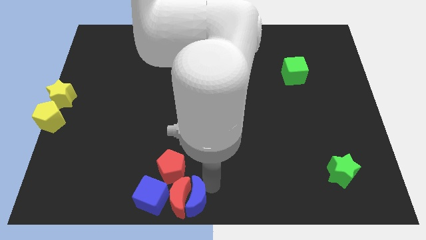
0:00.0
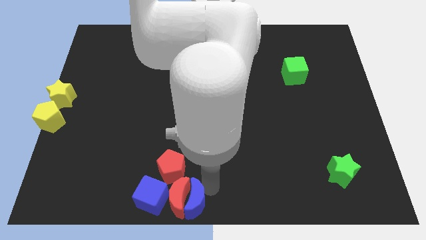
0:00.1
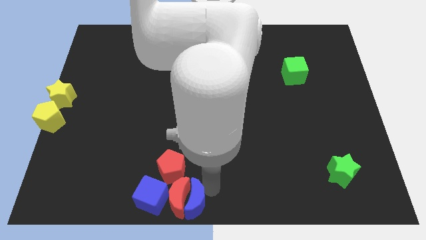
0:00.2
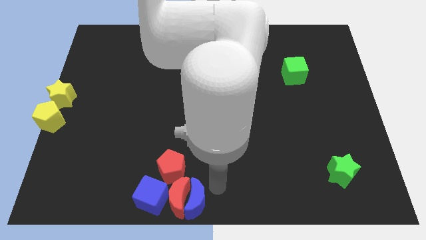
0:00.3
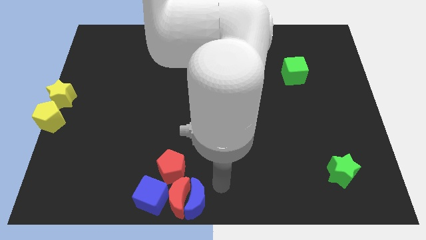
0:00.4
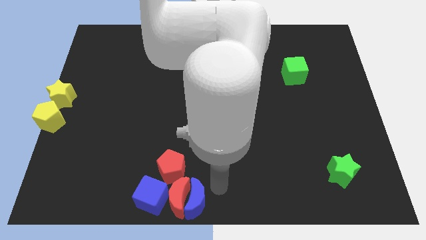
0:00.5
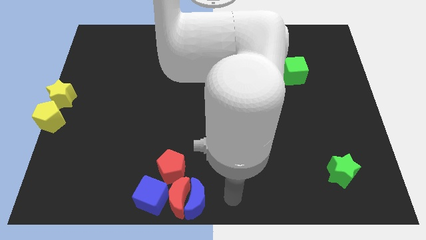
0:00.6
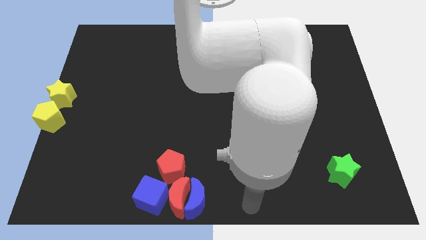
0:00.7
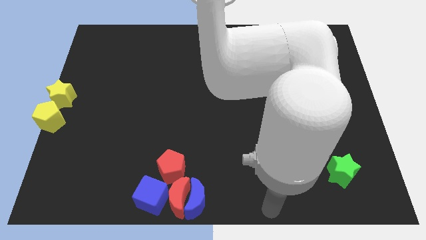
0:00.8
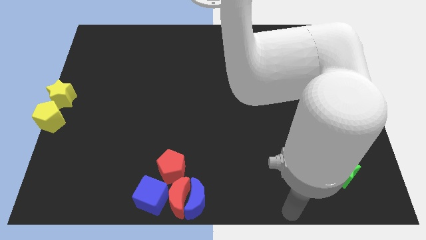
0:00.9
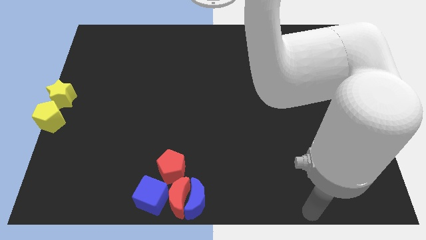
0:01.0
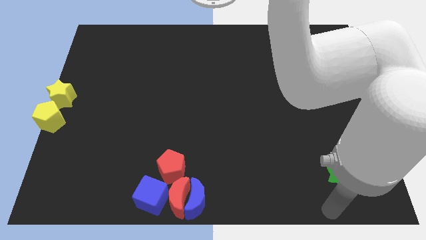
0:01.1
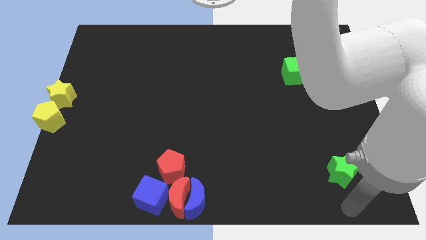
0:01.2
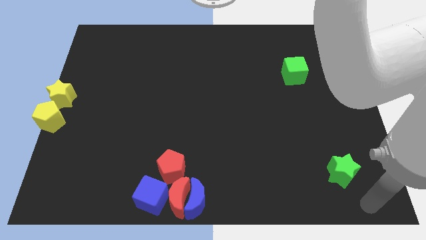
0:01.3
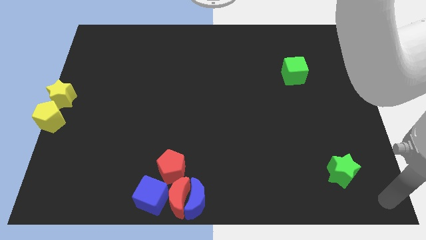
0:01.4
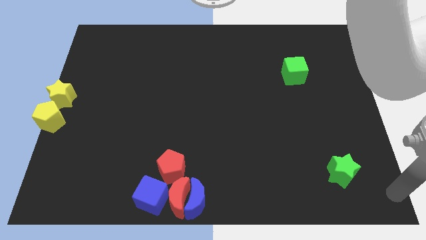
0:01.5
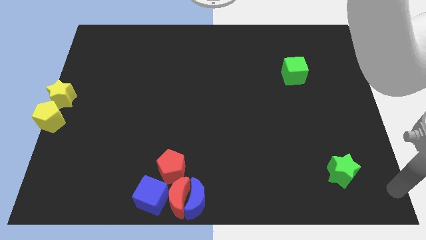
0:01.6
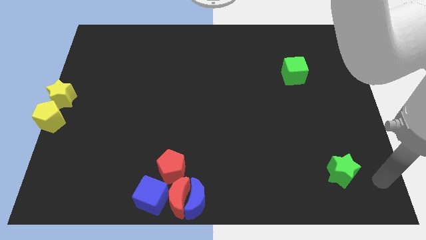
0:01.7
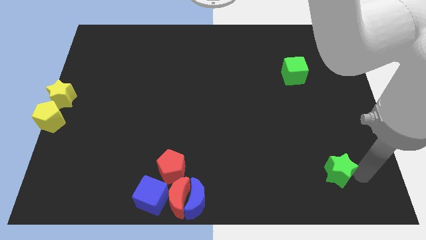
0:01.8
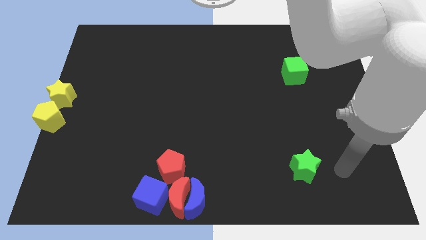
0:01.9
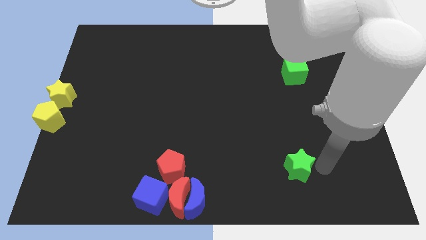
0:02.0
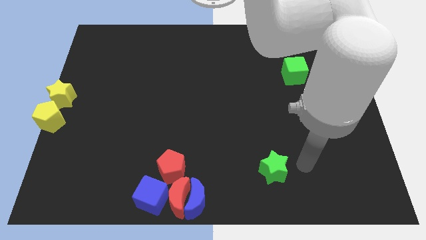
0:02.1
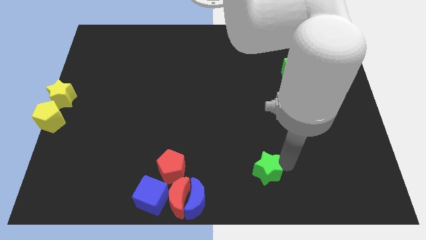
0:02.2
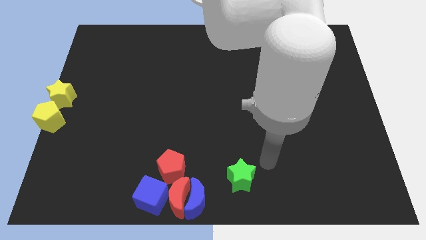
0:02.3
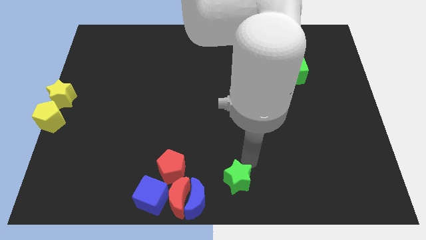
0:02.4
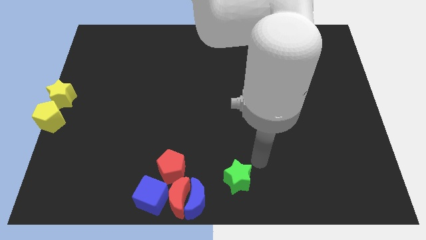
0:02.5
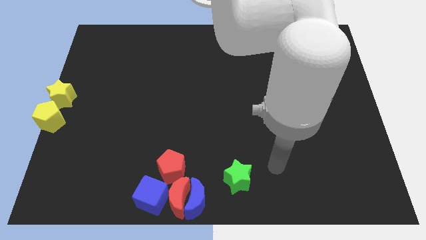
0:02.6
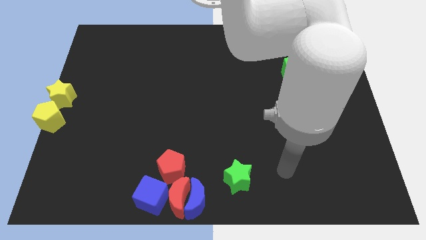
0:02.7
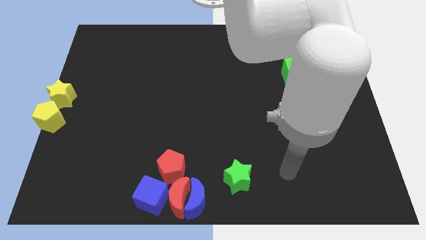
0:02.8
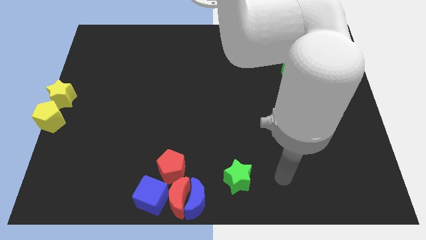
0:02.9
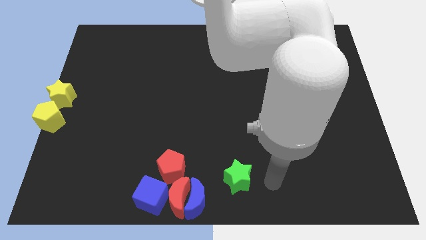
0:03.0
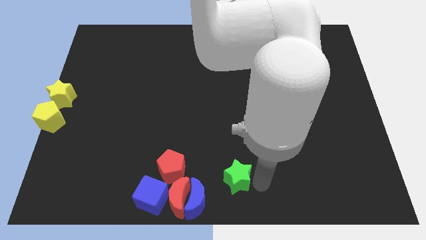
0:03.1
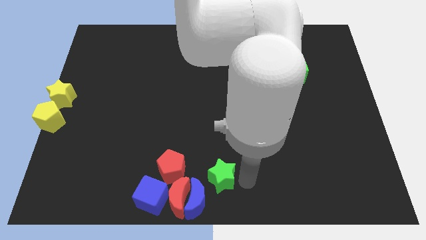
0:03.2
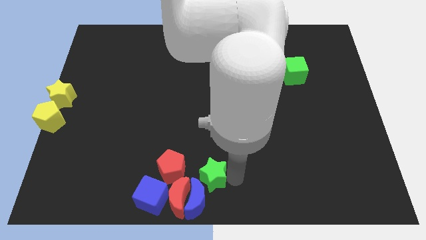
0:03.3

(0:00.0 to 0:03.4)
move the green star diagonally to the top right of the blue moon

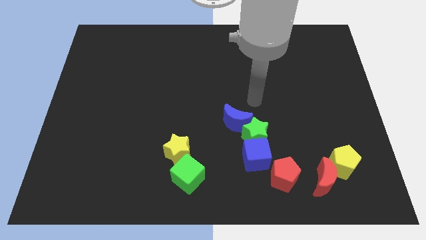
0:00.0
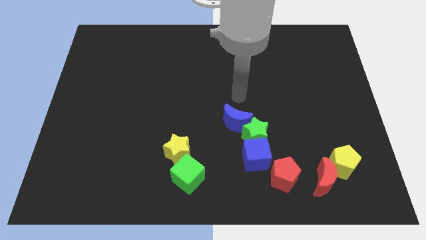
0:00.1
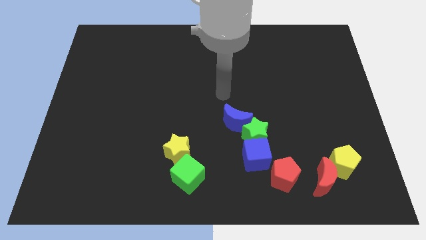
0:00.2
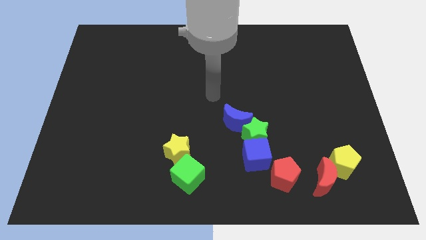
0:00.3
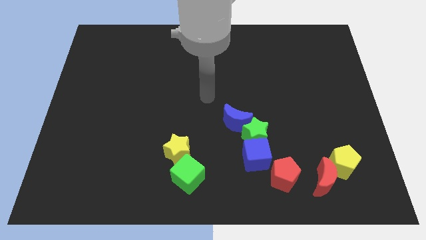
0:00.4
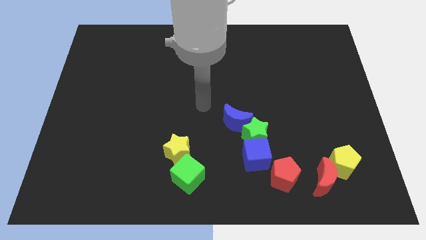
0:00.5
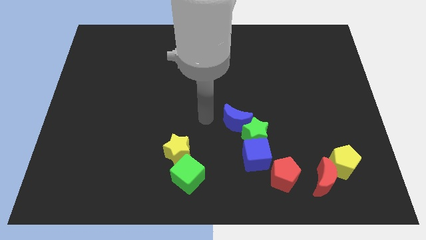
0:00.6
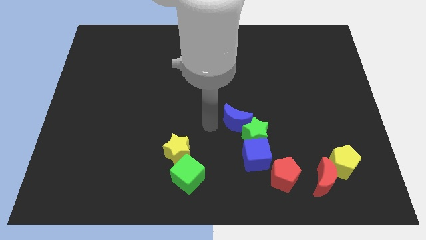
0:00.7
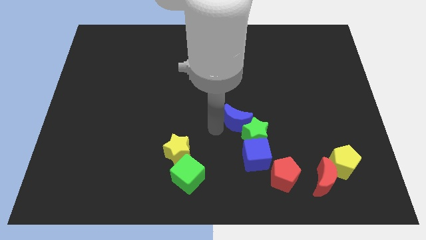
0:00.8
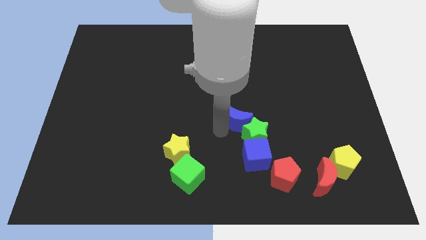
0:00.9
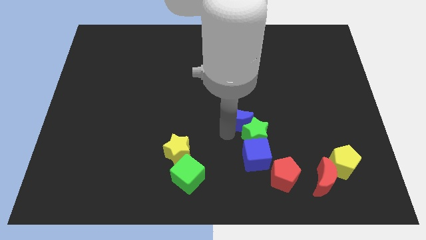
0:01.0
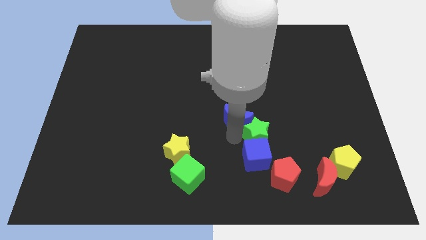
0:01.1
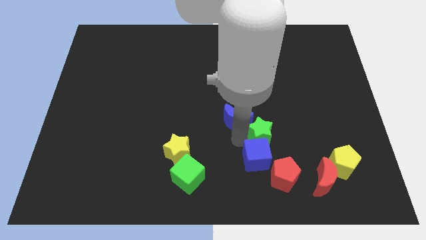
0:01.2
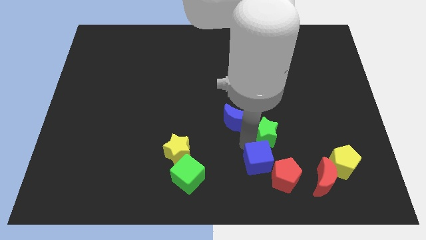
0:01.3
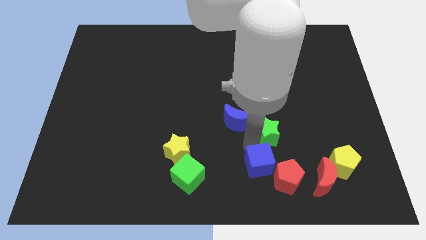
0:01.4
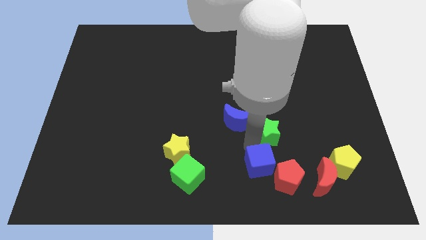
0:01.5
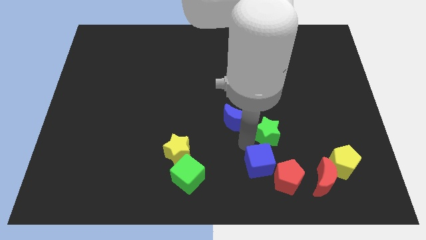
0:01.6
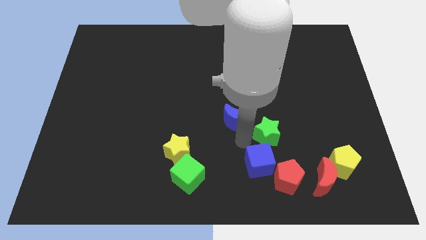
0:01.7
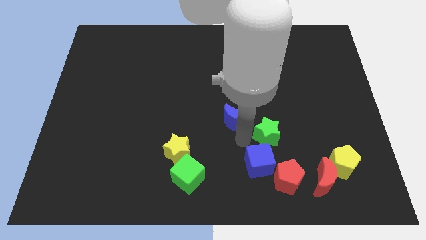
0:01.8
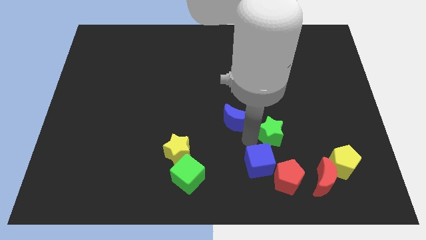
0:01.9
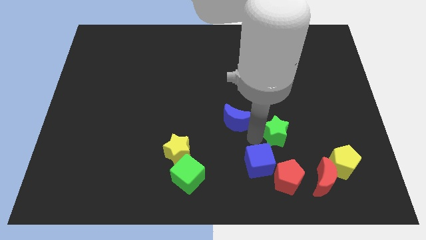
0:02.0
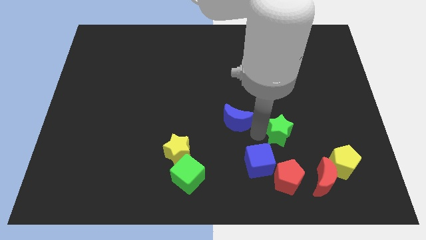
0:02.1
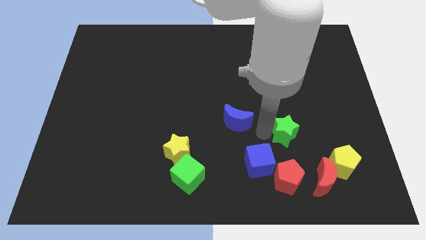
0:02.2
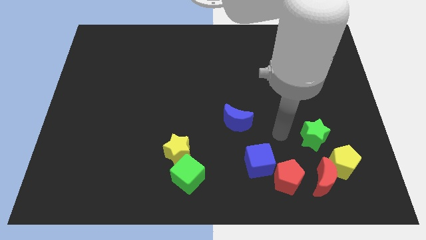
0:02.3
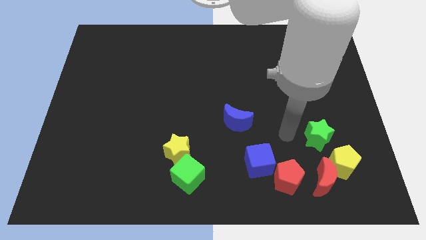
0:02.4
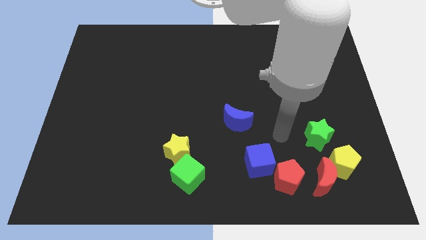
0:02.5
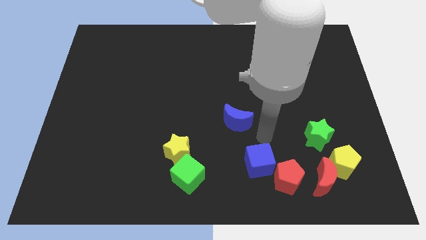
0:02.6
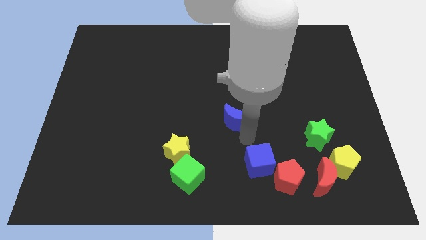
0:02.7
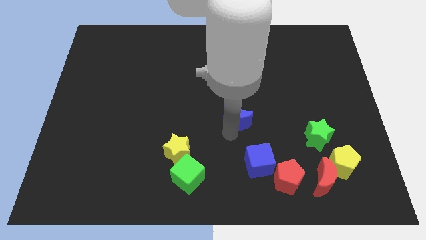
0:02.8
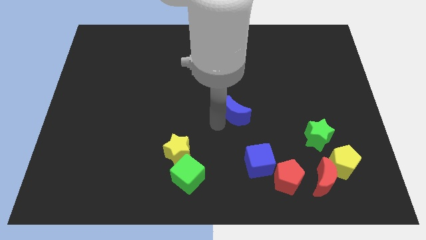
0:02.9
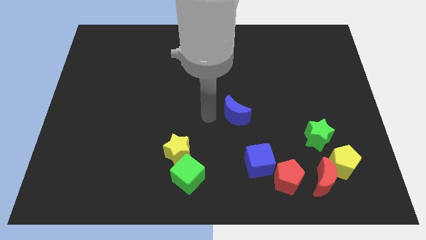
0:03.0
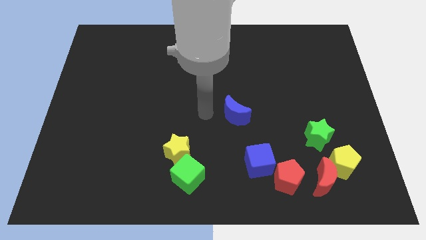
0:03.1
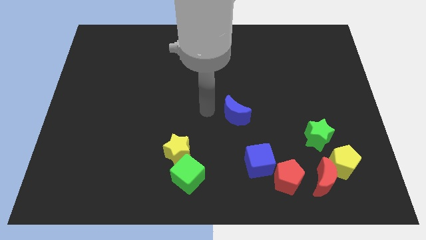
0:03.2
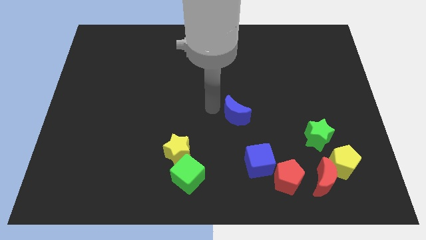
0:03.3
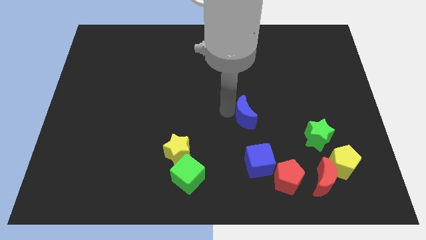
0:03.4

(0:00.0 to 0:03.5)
push away the green star from blue crescent and blue block

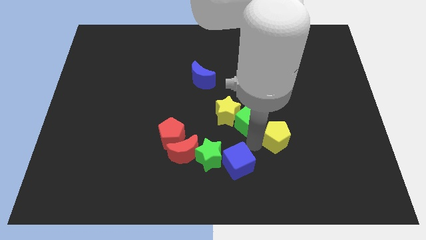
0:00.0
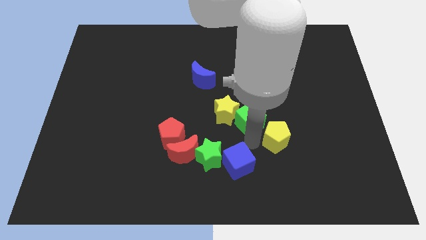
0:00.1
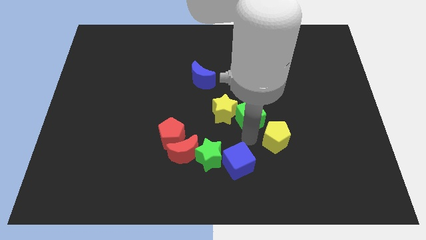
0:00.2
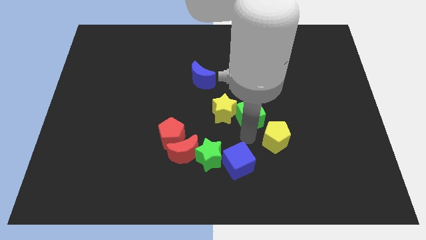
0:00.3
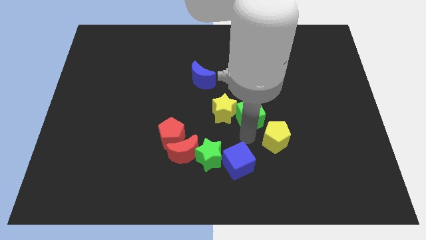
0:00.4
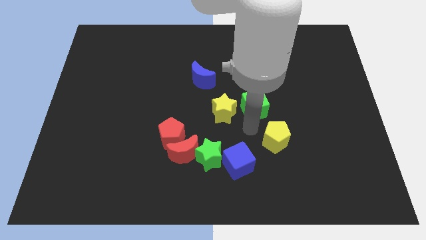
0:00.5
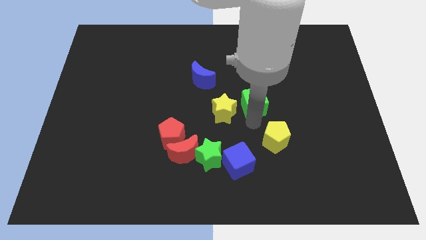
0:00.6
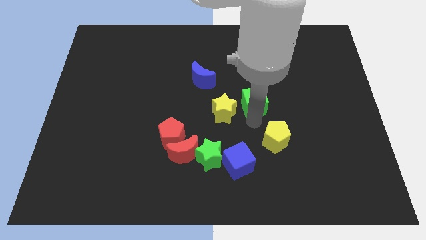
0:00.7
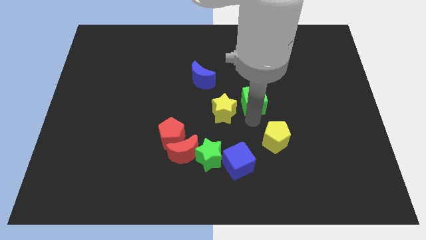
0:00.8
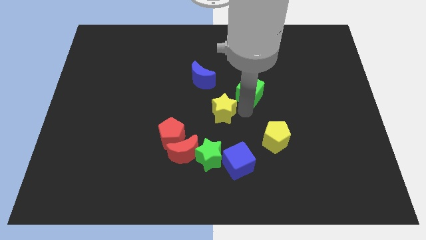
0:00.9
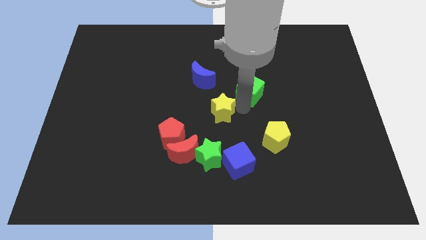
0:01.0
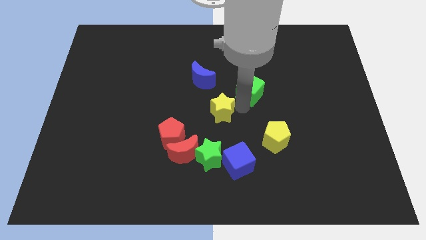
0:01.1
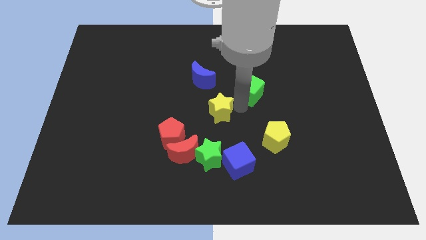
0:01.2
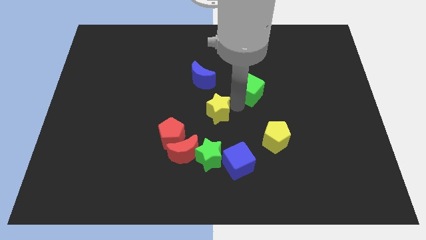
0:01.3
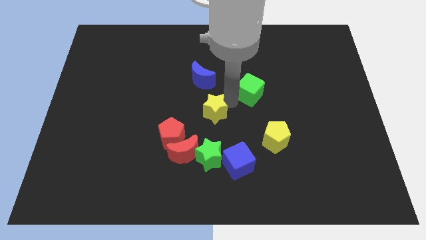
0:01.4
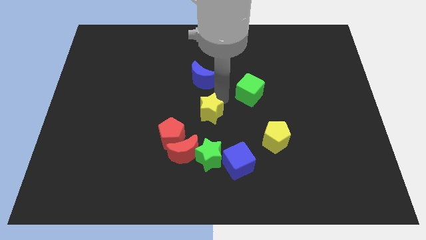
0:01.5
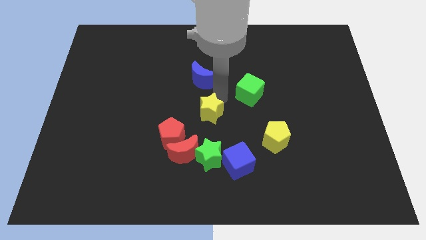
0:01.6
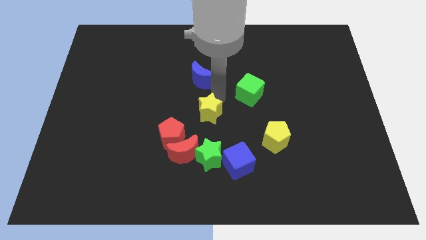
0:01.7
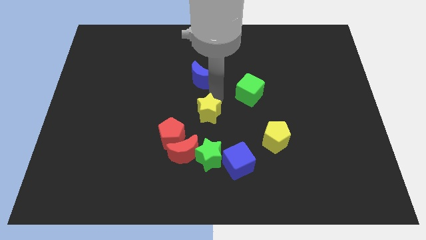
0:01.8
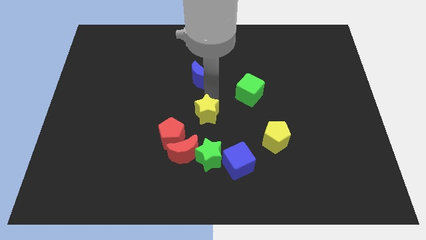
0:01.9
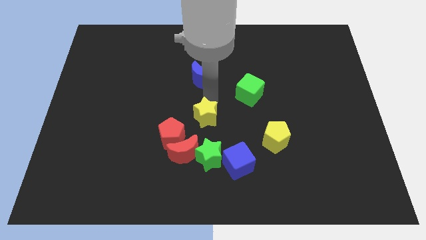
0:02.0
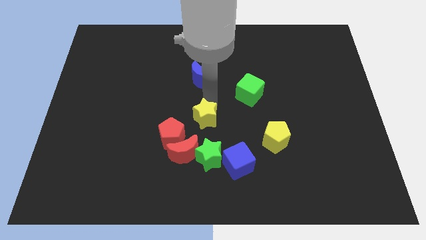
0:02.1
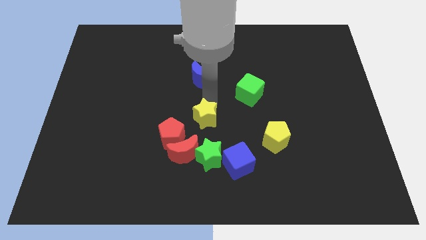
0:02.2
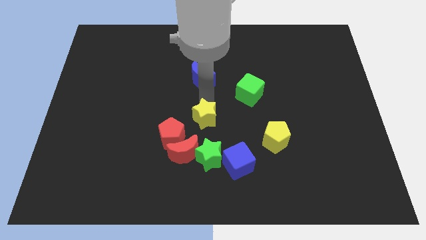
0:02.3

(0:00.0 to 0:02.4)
separate green cube and yellow star
